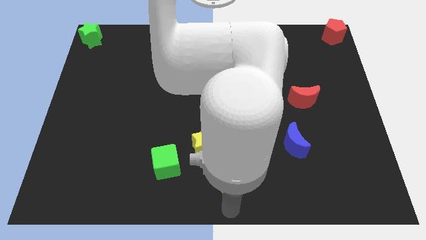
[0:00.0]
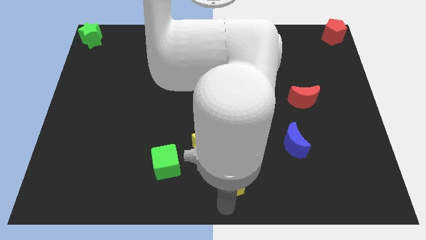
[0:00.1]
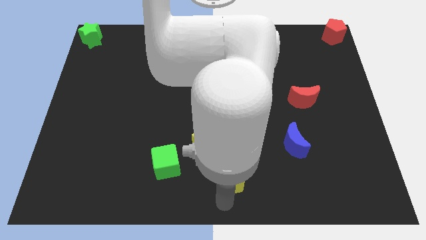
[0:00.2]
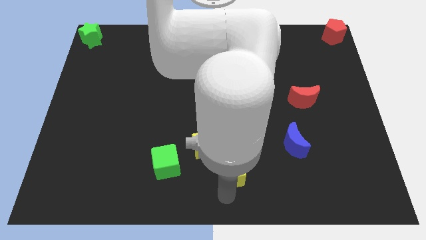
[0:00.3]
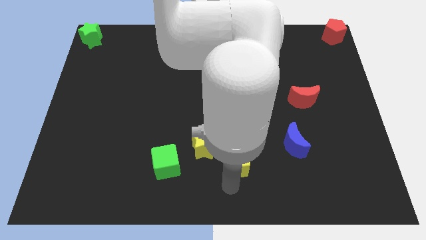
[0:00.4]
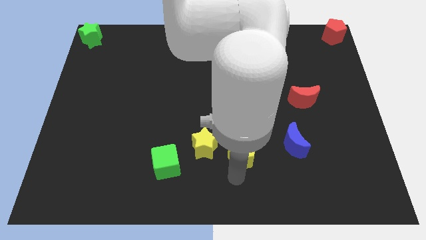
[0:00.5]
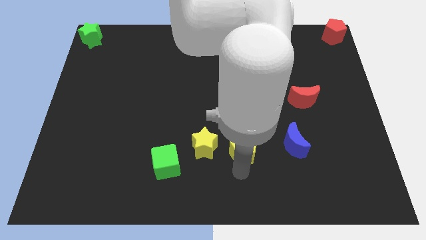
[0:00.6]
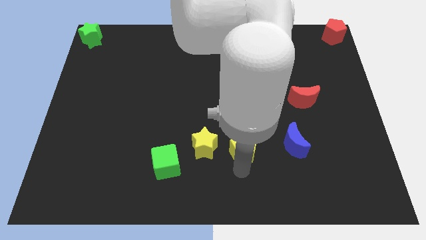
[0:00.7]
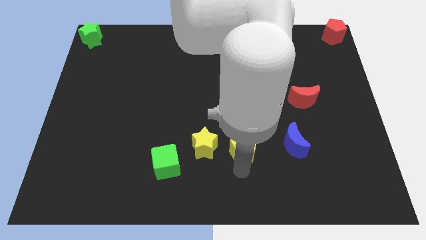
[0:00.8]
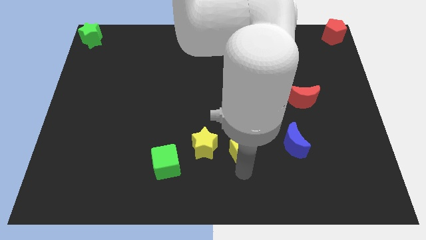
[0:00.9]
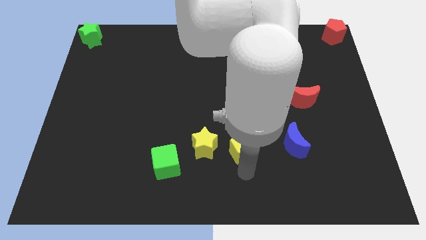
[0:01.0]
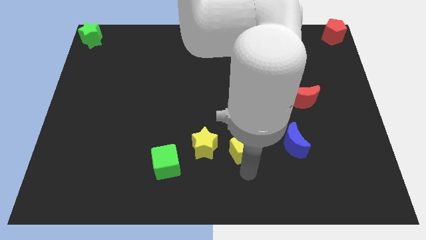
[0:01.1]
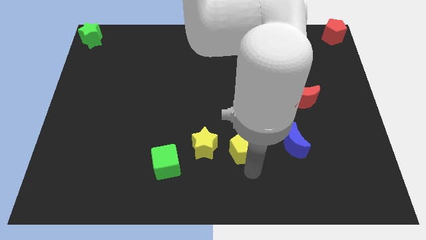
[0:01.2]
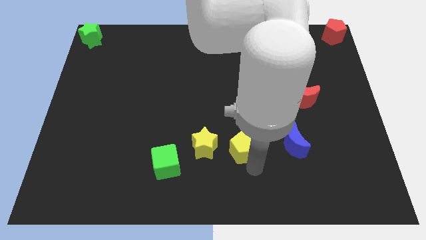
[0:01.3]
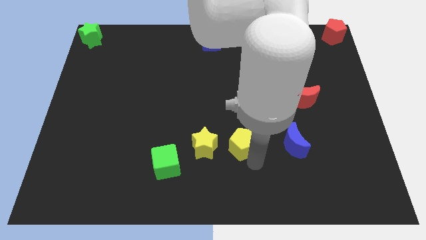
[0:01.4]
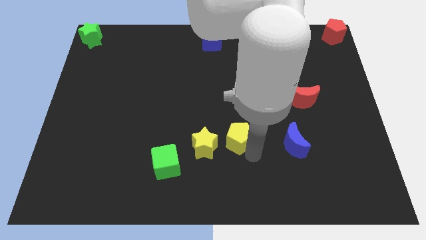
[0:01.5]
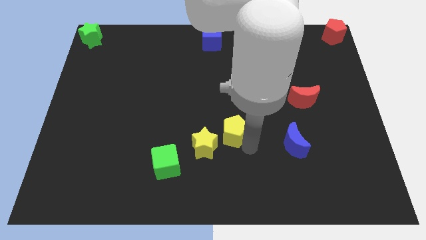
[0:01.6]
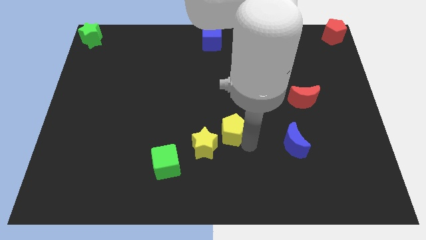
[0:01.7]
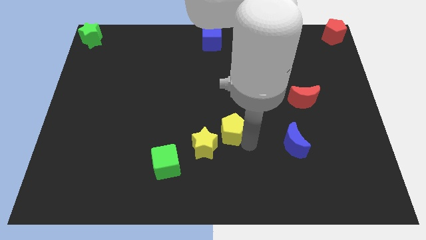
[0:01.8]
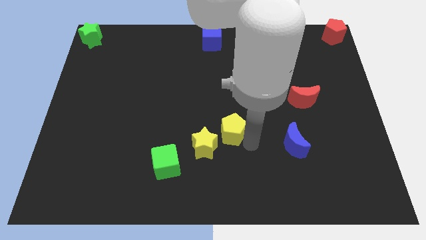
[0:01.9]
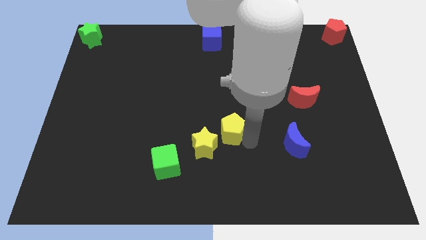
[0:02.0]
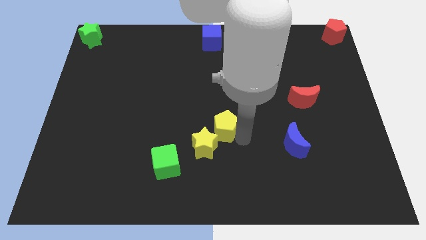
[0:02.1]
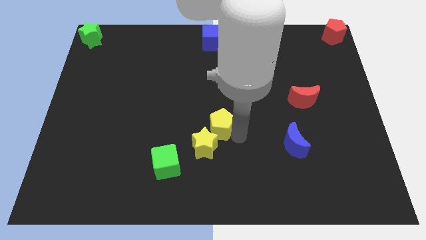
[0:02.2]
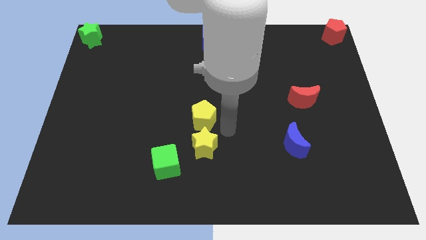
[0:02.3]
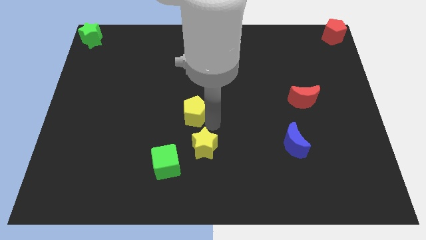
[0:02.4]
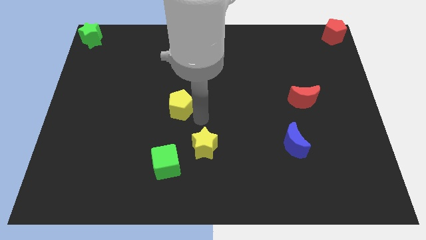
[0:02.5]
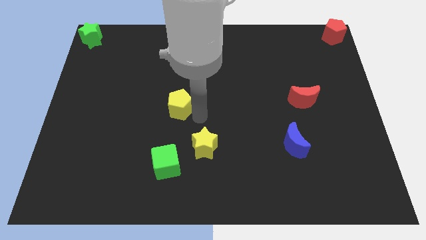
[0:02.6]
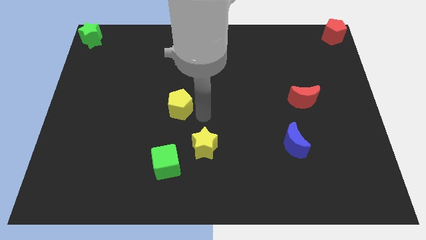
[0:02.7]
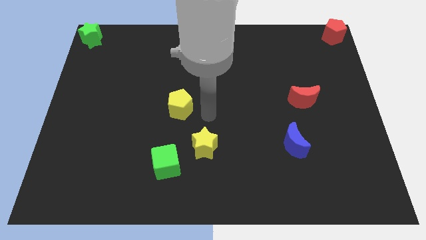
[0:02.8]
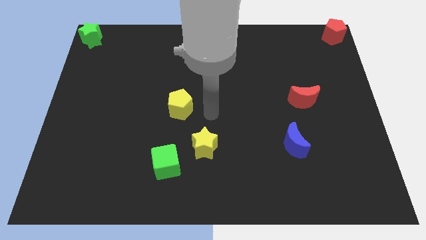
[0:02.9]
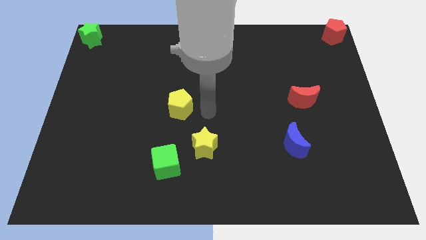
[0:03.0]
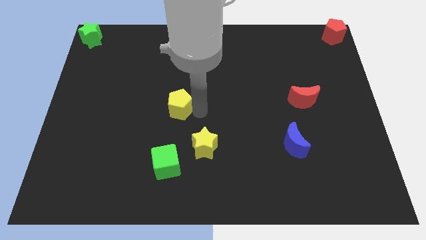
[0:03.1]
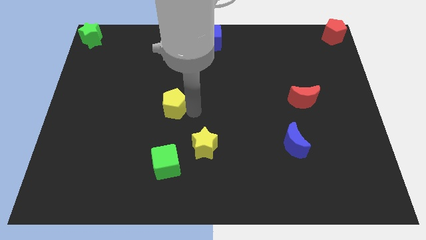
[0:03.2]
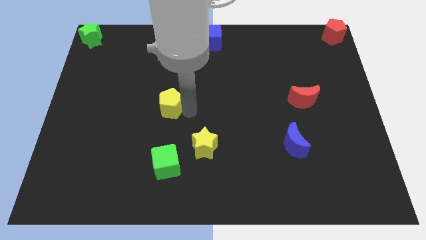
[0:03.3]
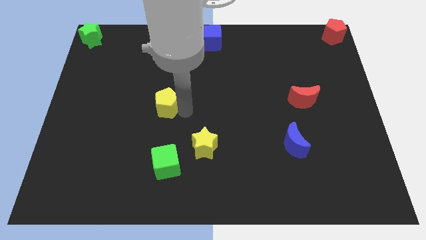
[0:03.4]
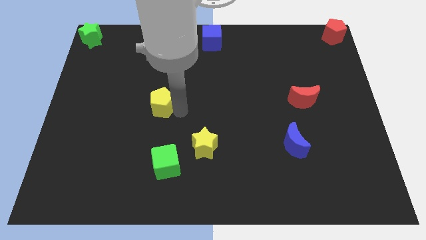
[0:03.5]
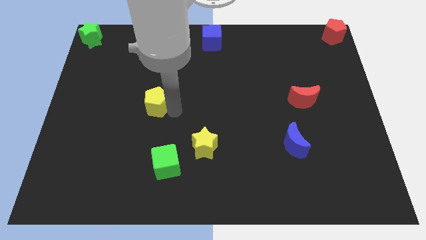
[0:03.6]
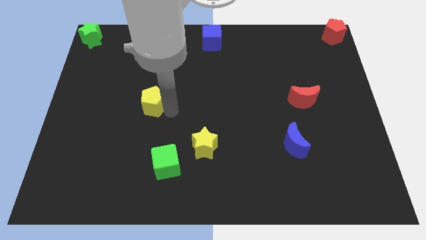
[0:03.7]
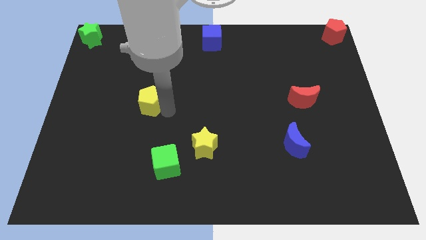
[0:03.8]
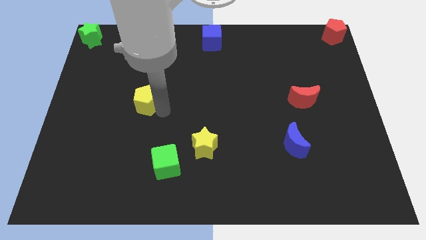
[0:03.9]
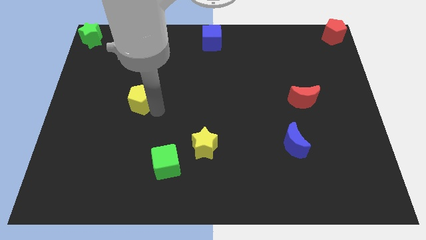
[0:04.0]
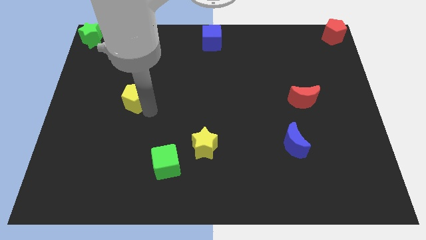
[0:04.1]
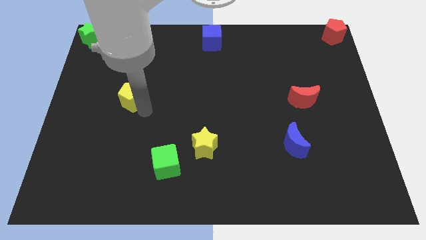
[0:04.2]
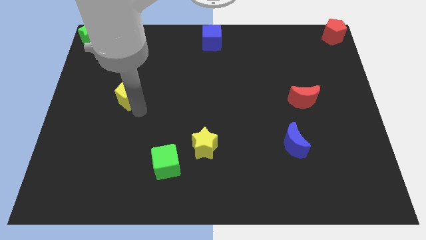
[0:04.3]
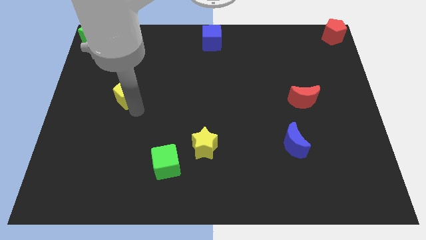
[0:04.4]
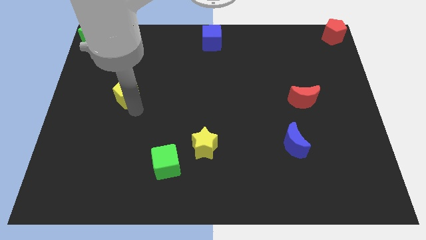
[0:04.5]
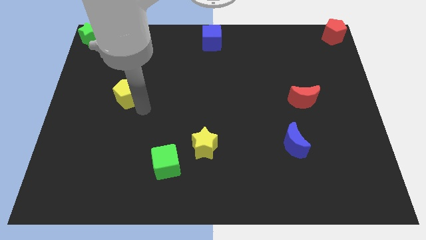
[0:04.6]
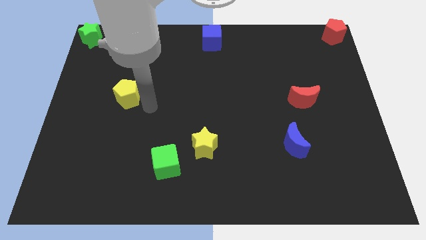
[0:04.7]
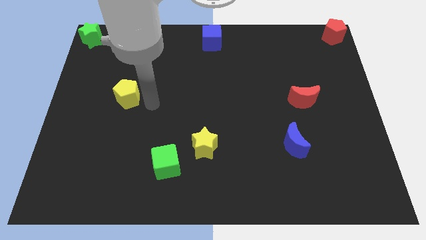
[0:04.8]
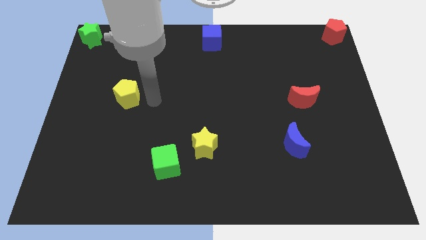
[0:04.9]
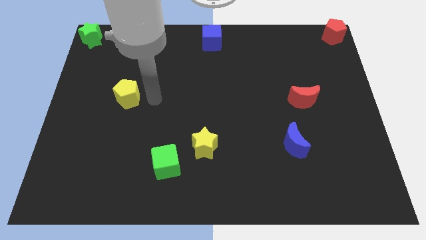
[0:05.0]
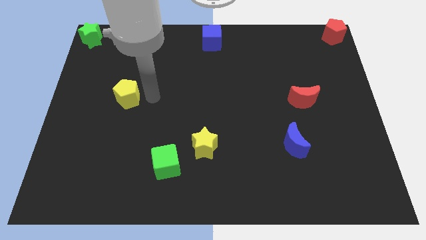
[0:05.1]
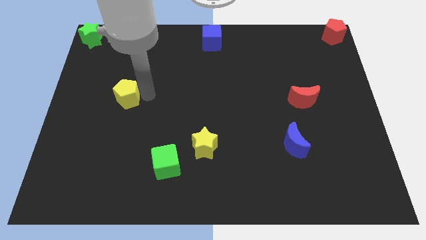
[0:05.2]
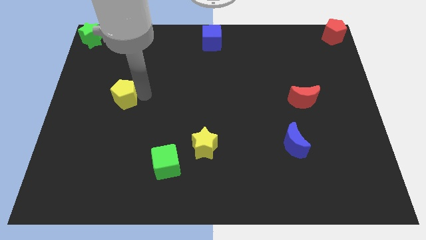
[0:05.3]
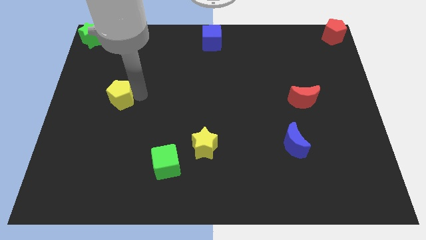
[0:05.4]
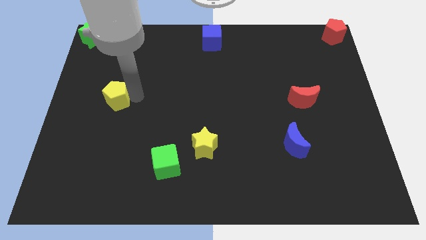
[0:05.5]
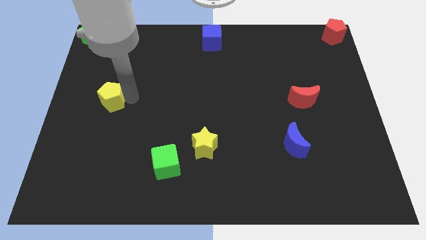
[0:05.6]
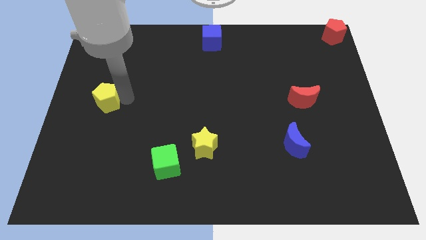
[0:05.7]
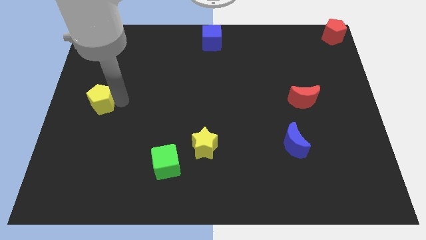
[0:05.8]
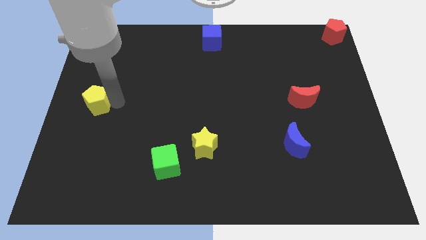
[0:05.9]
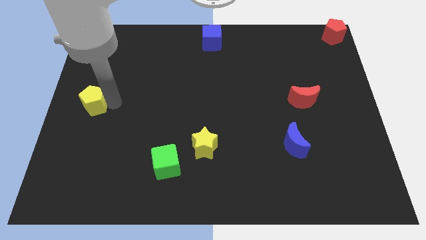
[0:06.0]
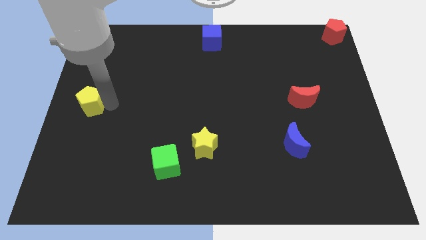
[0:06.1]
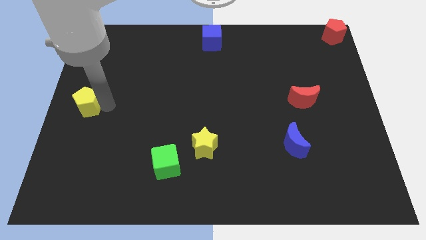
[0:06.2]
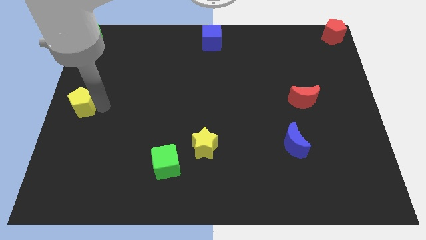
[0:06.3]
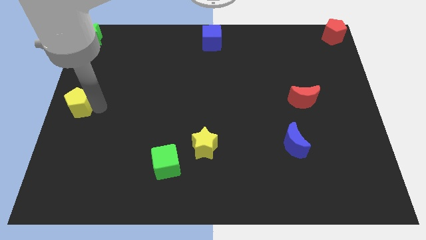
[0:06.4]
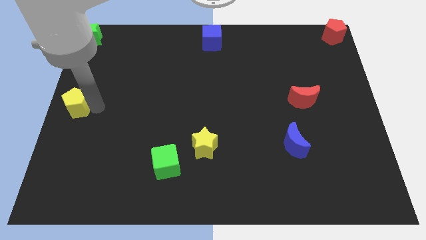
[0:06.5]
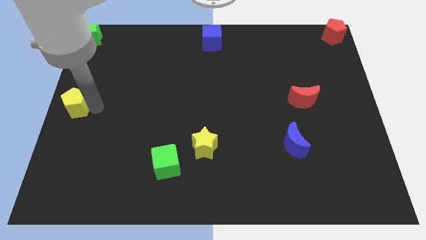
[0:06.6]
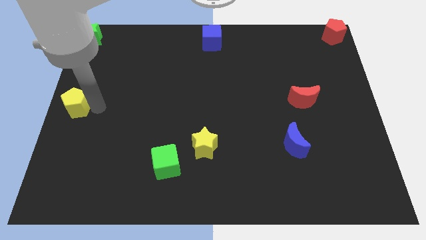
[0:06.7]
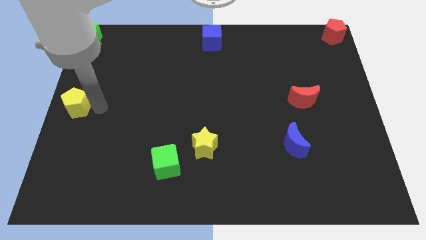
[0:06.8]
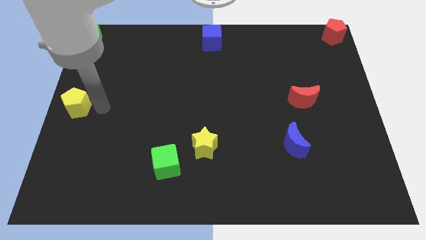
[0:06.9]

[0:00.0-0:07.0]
place the yellow pentagon to the center left of board

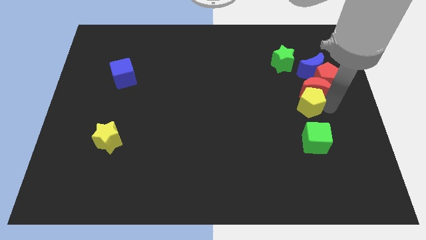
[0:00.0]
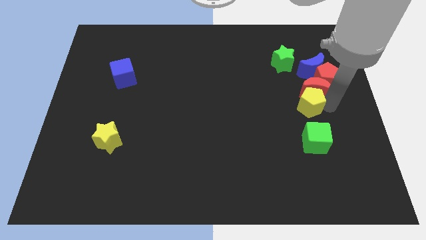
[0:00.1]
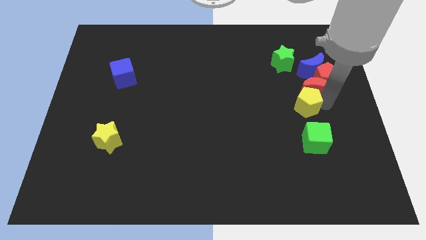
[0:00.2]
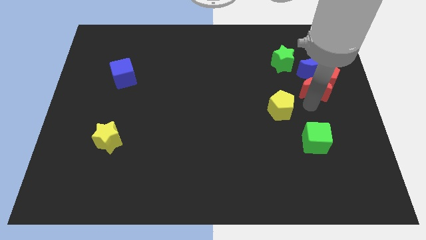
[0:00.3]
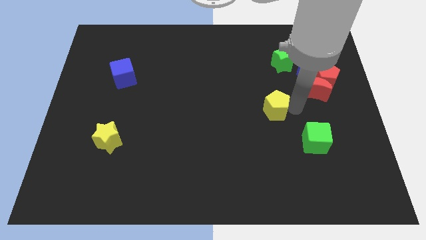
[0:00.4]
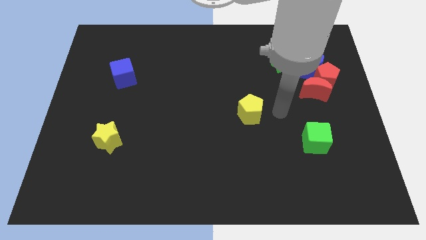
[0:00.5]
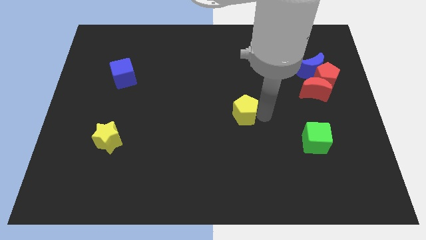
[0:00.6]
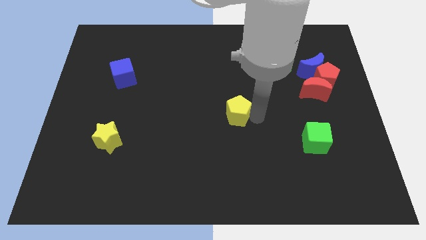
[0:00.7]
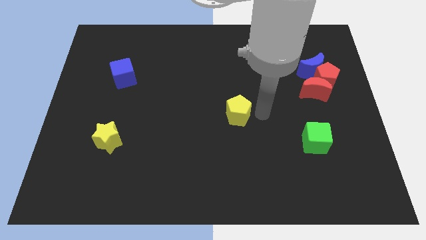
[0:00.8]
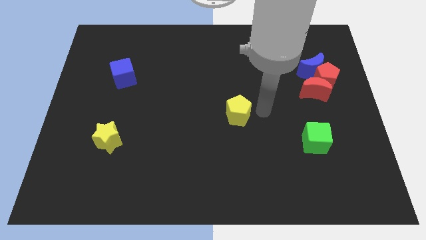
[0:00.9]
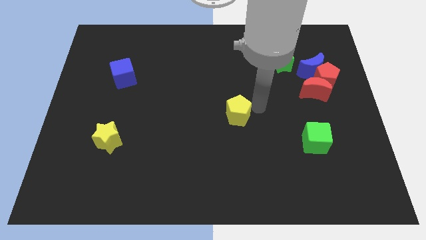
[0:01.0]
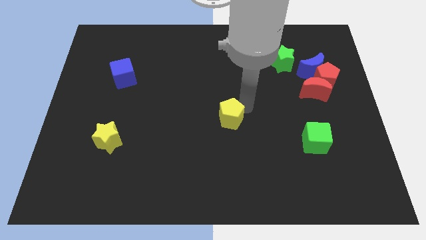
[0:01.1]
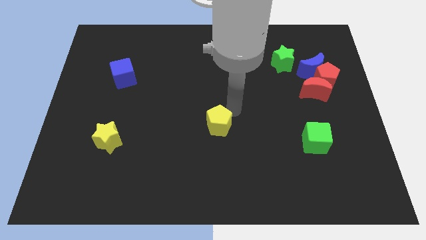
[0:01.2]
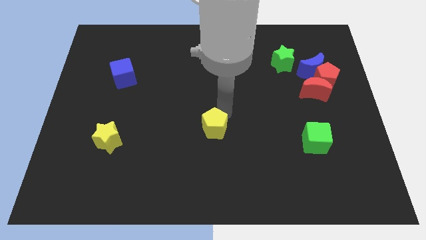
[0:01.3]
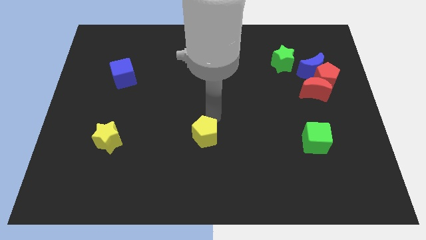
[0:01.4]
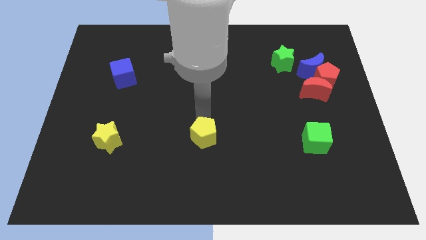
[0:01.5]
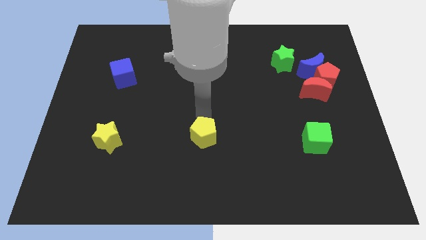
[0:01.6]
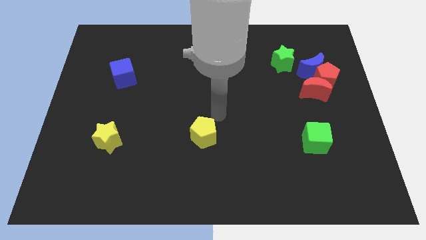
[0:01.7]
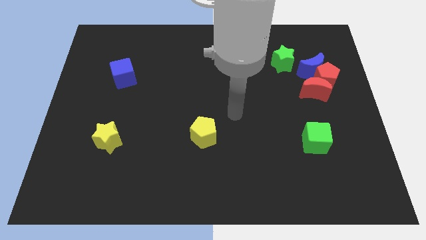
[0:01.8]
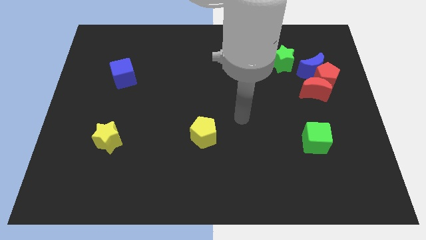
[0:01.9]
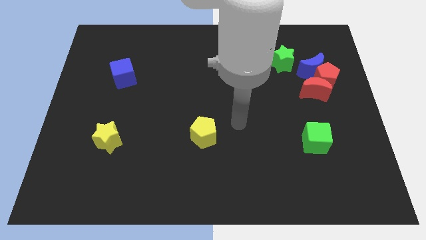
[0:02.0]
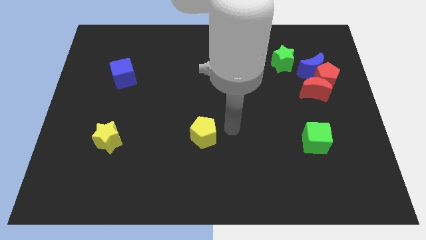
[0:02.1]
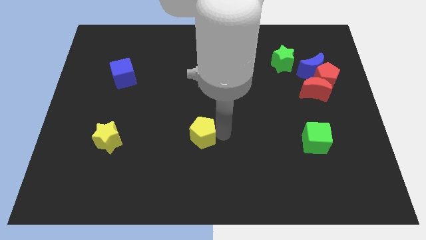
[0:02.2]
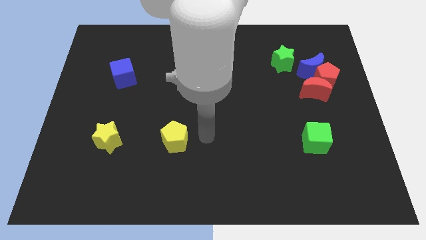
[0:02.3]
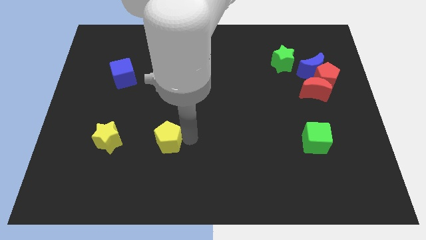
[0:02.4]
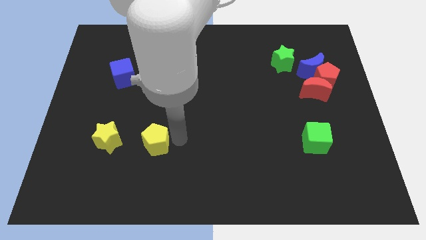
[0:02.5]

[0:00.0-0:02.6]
move yellow pentagon to the right of yellow star
